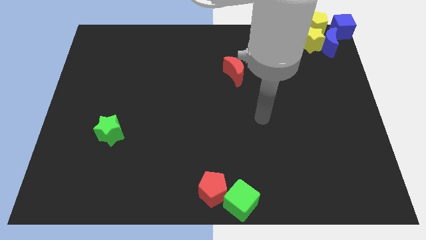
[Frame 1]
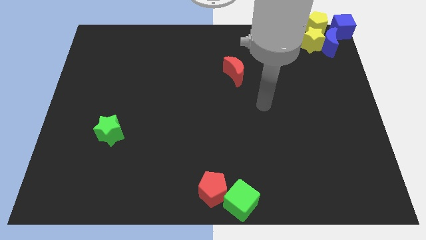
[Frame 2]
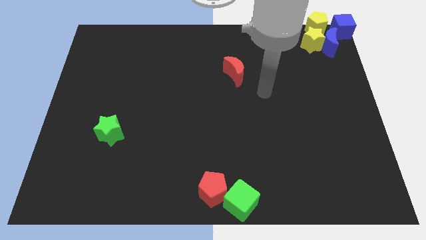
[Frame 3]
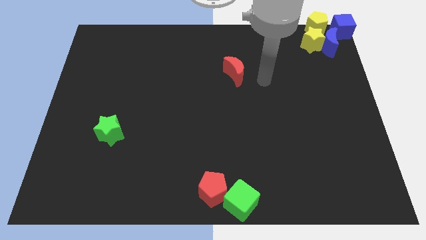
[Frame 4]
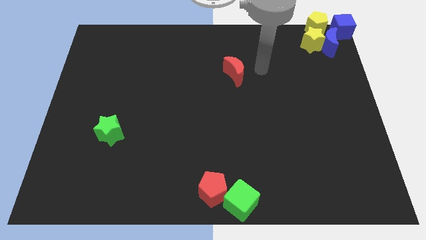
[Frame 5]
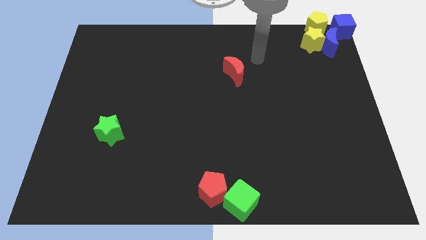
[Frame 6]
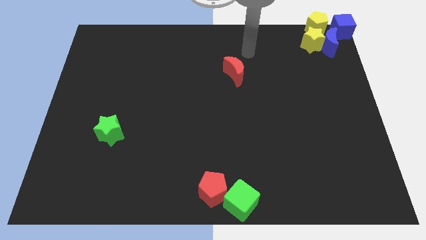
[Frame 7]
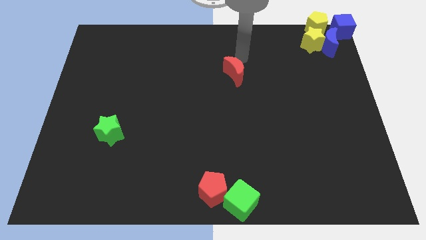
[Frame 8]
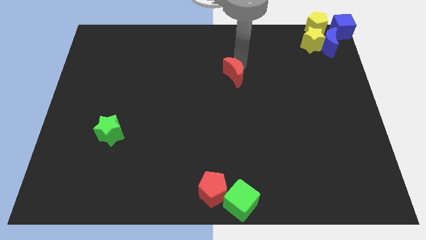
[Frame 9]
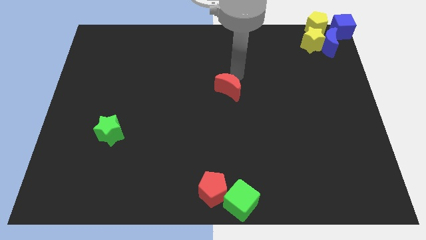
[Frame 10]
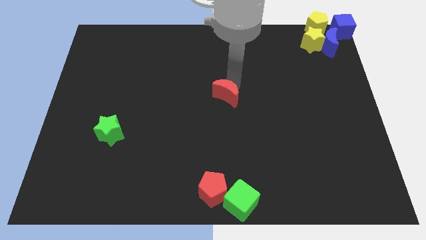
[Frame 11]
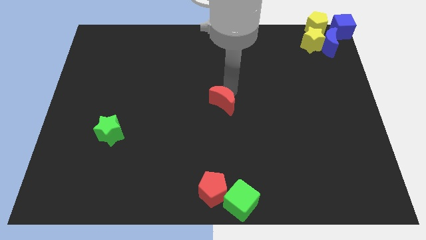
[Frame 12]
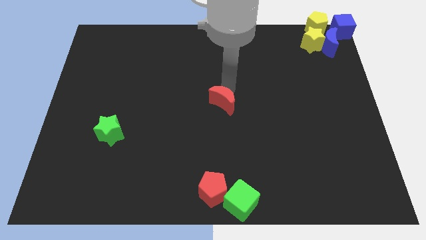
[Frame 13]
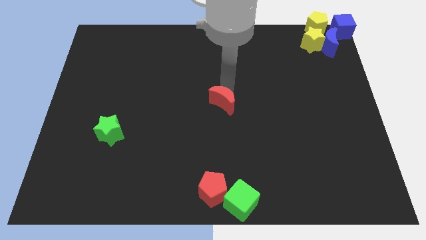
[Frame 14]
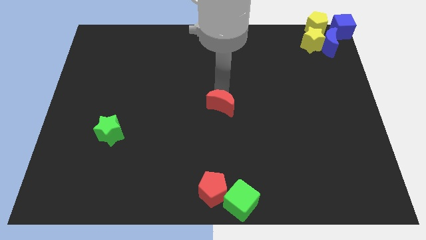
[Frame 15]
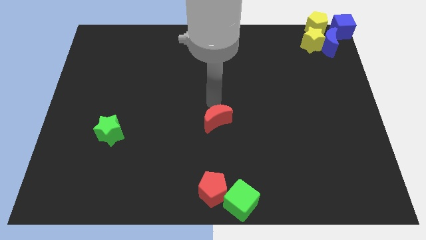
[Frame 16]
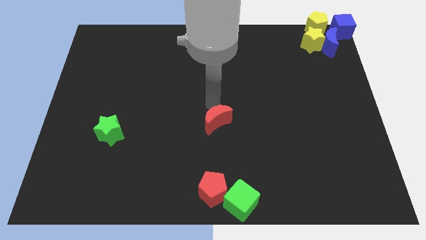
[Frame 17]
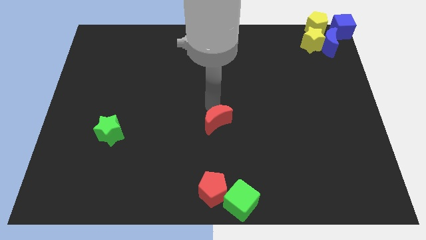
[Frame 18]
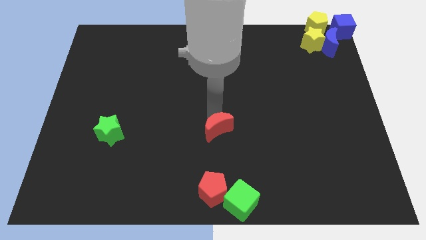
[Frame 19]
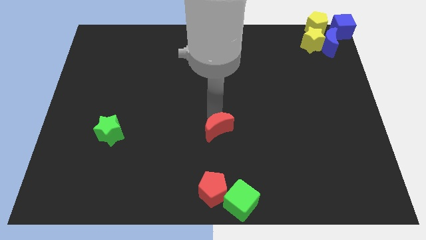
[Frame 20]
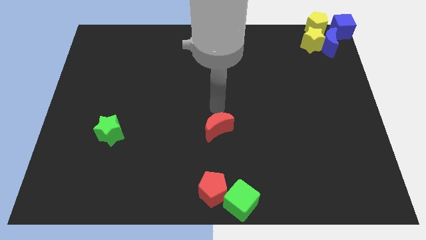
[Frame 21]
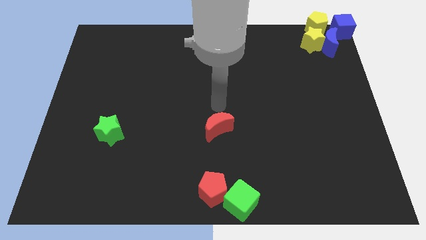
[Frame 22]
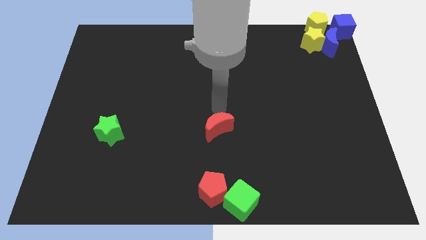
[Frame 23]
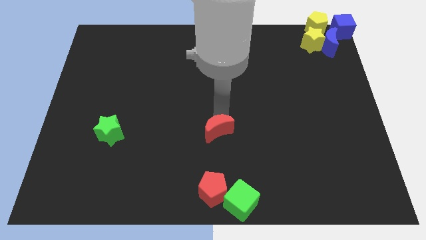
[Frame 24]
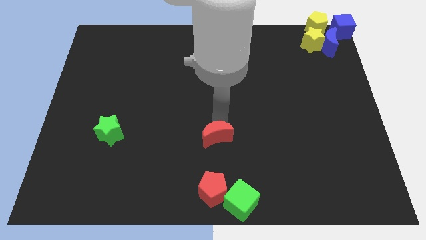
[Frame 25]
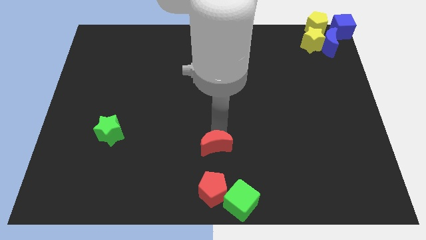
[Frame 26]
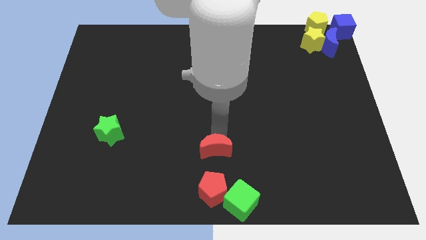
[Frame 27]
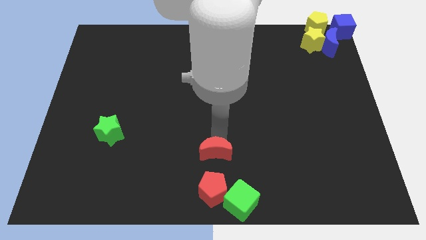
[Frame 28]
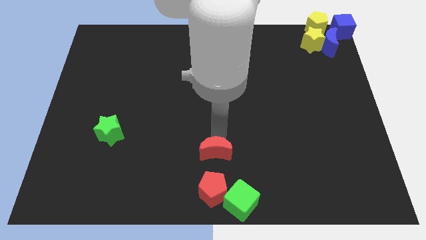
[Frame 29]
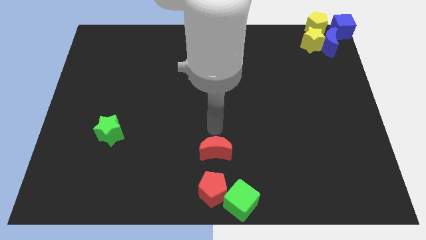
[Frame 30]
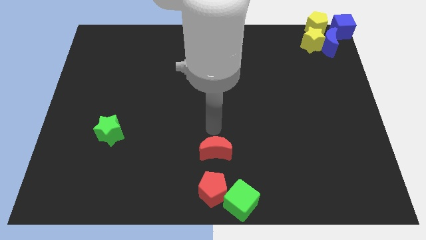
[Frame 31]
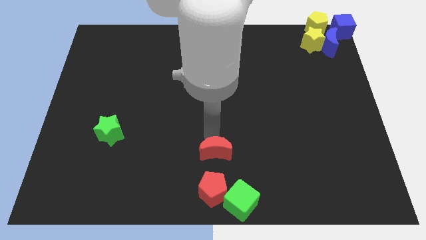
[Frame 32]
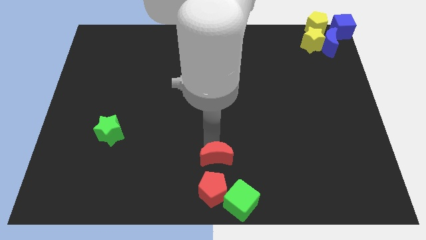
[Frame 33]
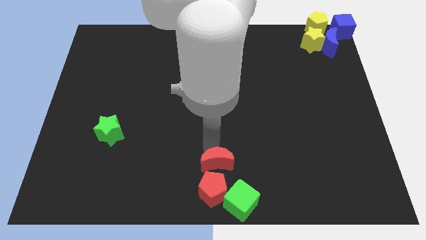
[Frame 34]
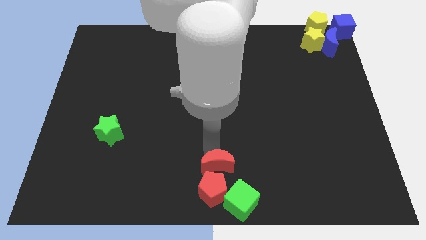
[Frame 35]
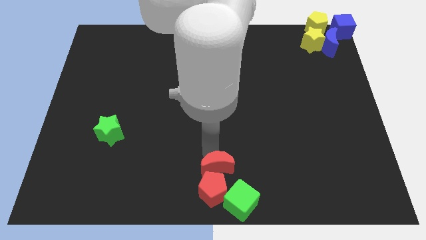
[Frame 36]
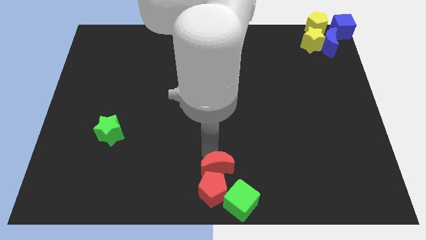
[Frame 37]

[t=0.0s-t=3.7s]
place the red moon to the top side of the red pentagon

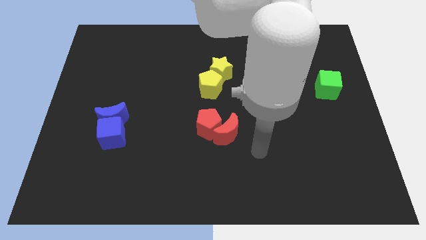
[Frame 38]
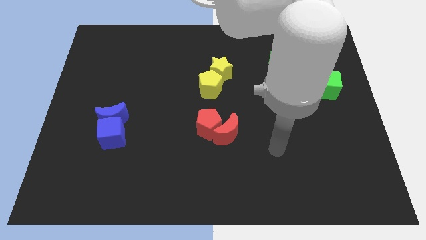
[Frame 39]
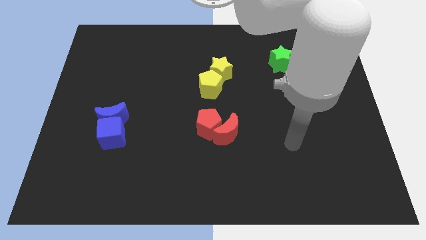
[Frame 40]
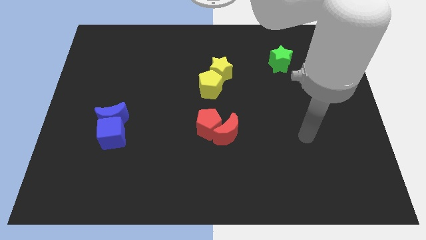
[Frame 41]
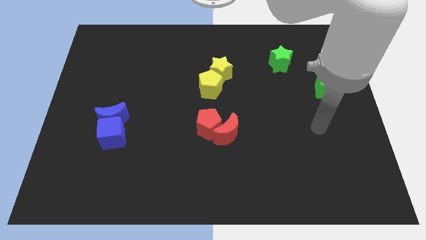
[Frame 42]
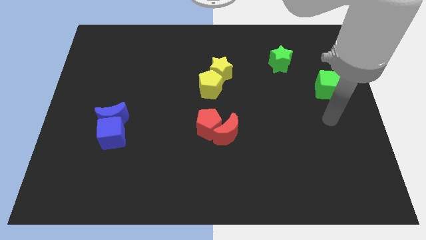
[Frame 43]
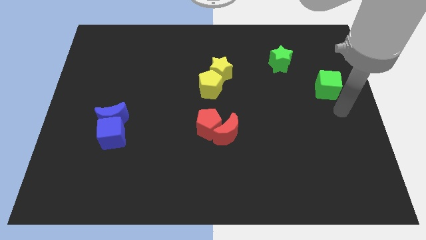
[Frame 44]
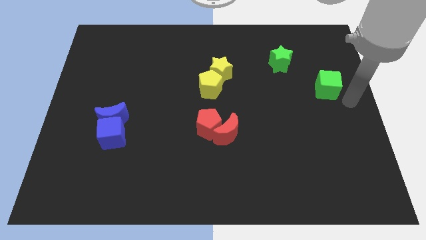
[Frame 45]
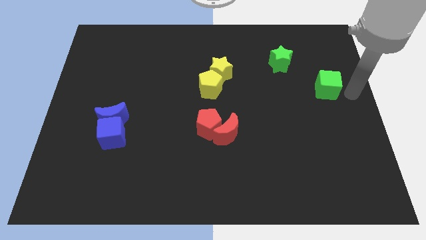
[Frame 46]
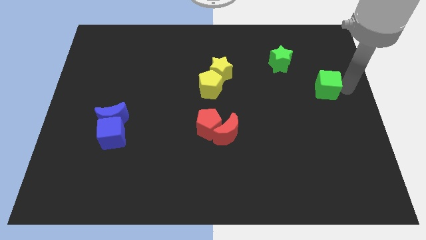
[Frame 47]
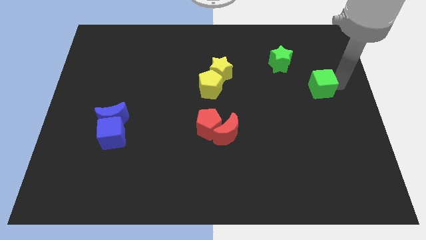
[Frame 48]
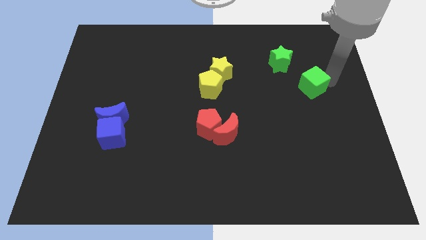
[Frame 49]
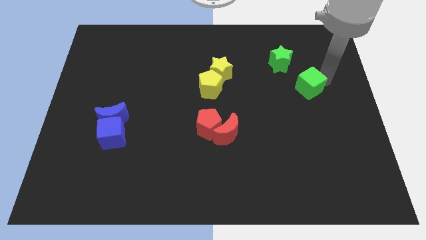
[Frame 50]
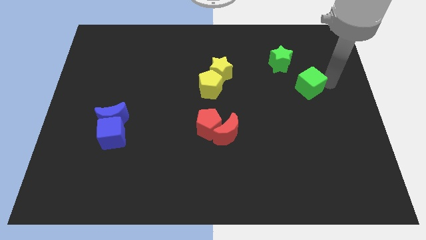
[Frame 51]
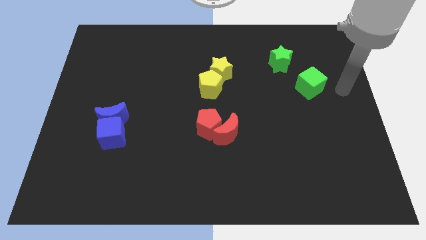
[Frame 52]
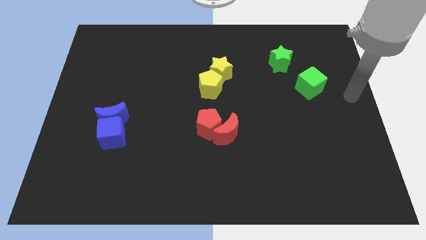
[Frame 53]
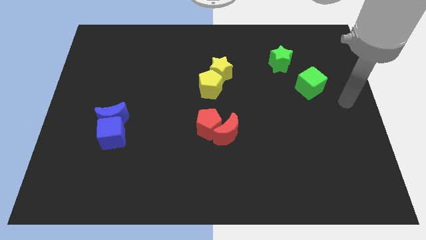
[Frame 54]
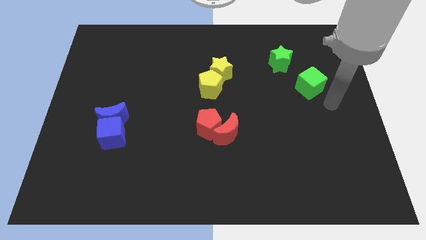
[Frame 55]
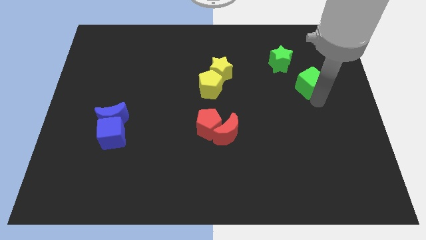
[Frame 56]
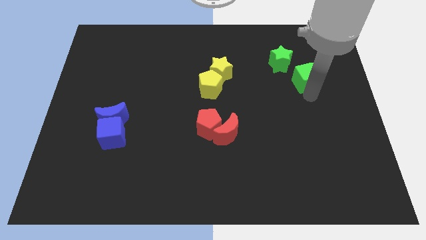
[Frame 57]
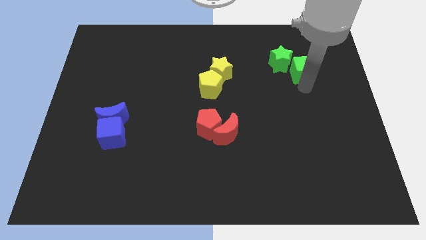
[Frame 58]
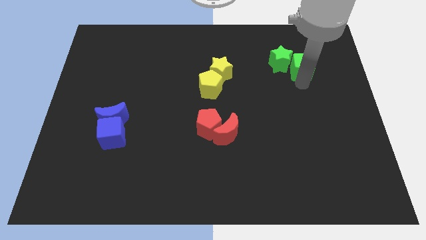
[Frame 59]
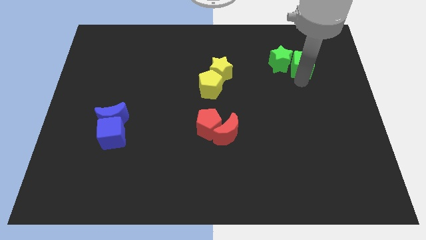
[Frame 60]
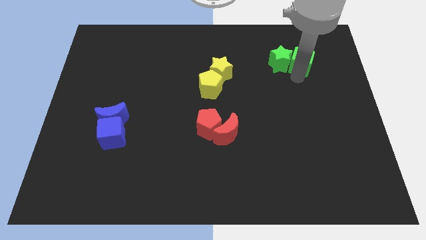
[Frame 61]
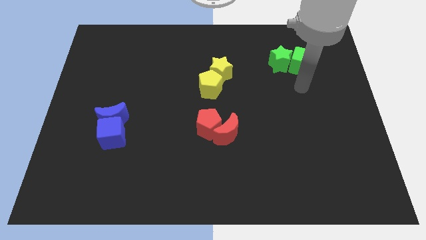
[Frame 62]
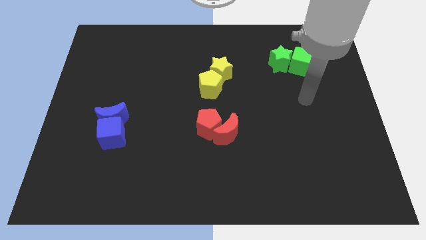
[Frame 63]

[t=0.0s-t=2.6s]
place green cube beside the green star

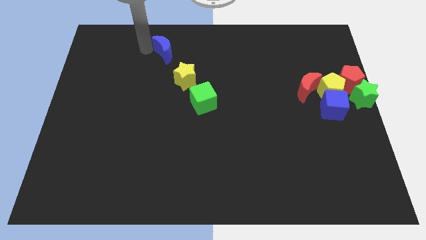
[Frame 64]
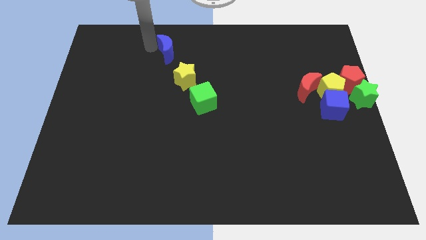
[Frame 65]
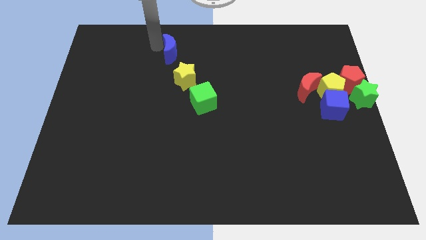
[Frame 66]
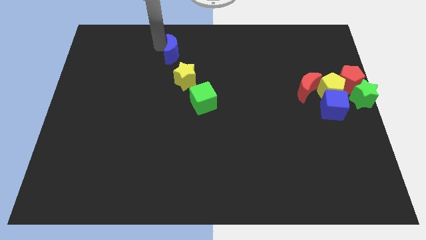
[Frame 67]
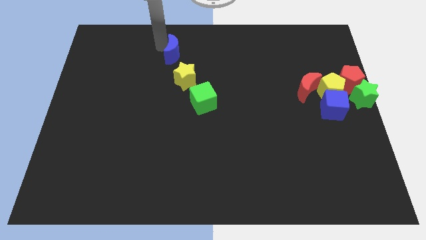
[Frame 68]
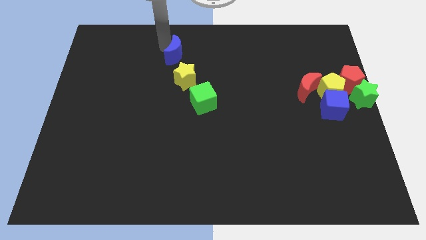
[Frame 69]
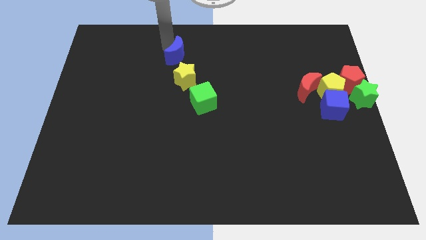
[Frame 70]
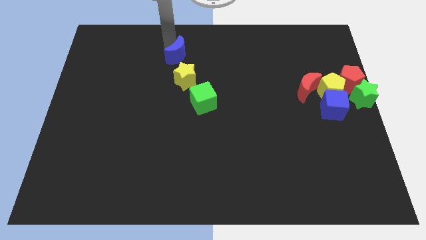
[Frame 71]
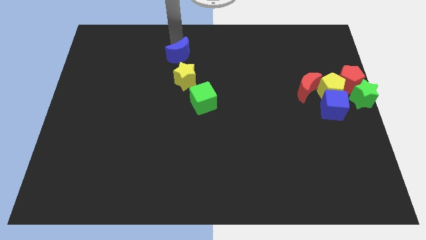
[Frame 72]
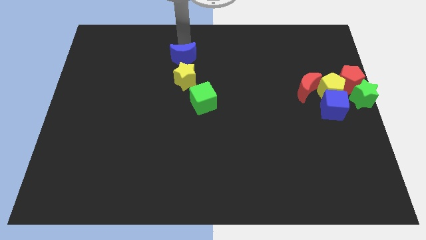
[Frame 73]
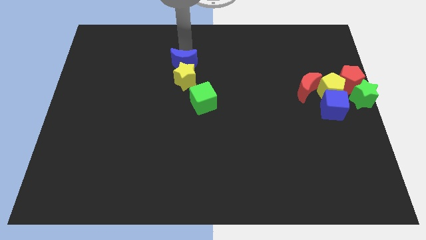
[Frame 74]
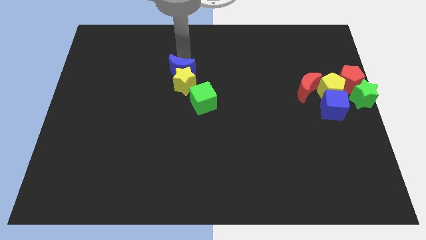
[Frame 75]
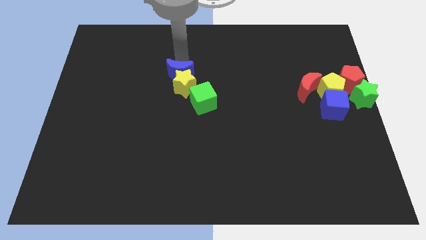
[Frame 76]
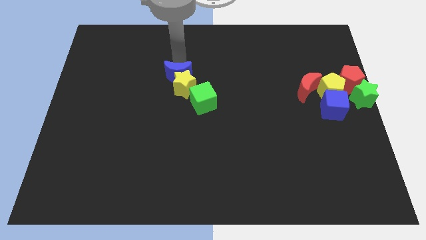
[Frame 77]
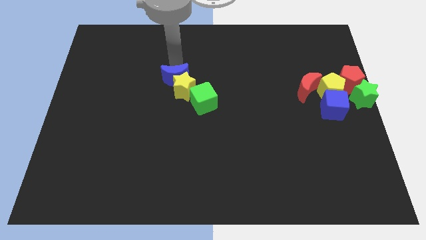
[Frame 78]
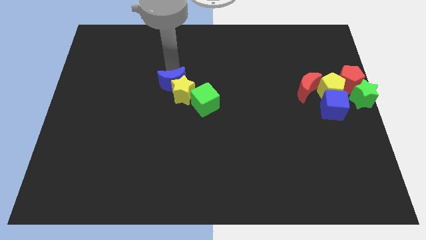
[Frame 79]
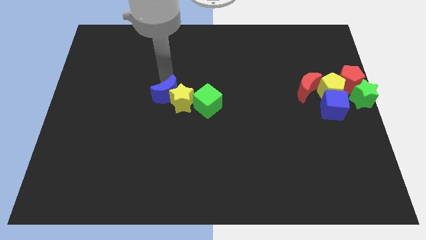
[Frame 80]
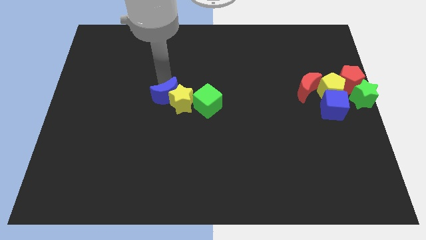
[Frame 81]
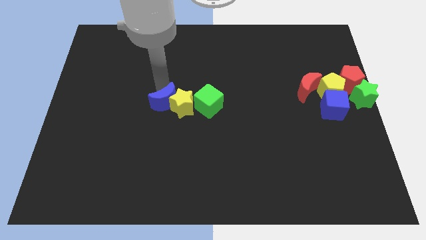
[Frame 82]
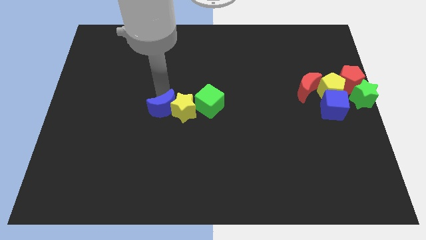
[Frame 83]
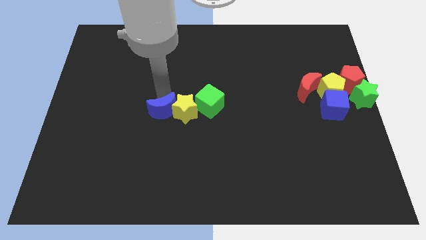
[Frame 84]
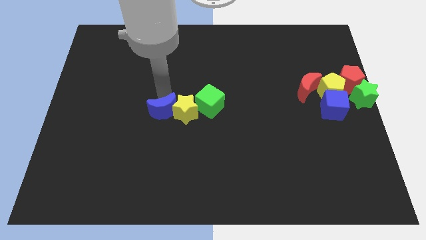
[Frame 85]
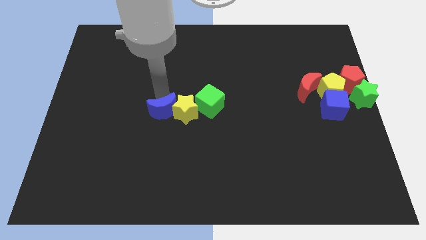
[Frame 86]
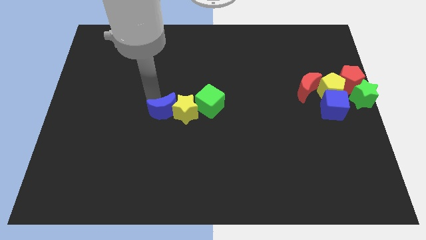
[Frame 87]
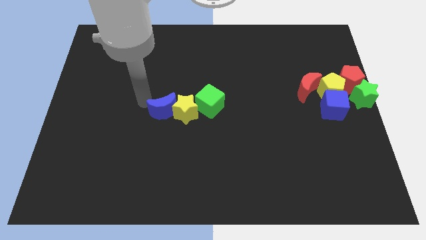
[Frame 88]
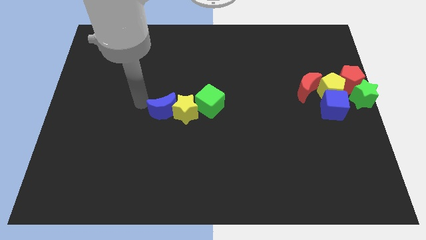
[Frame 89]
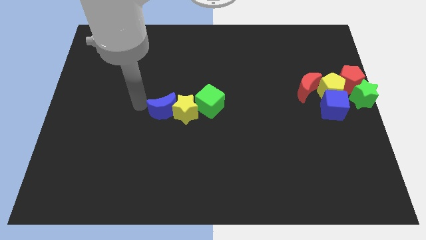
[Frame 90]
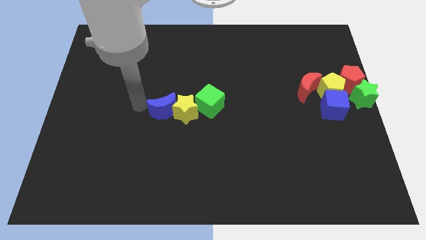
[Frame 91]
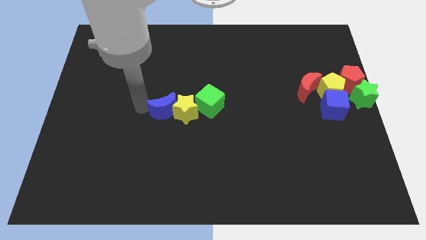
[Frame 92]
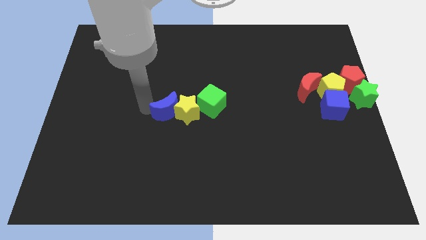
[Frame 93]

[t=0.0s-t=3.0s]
place the yellow star and blue moon to the left side of the green cube
